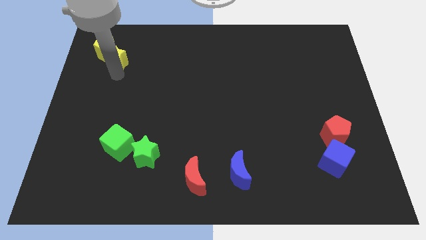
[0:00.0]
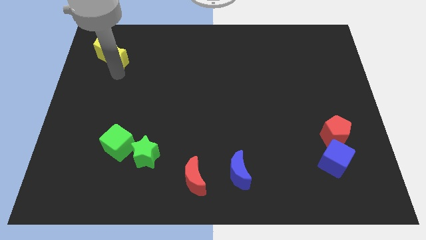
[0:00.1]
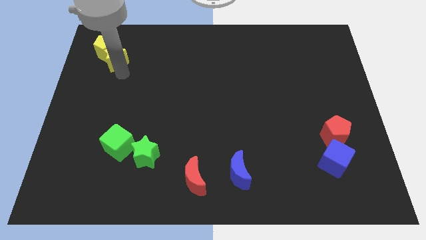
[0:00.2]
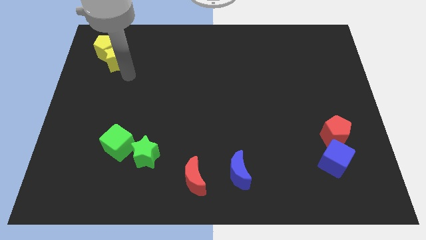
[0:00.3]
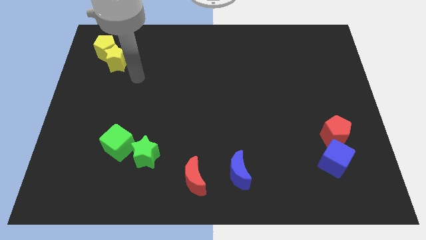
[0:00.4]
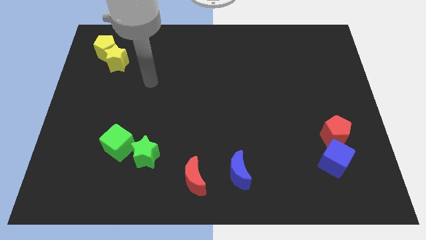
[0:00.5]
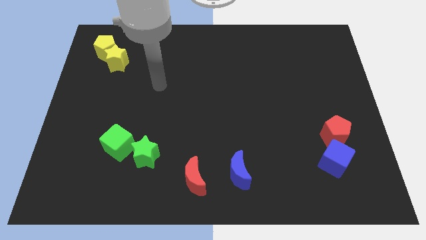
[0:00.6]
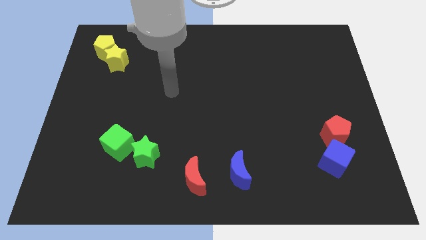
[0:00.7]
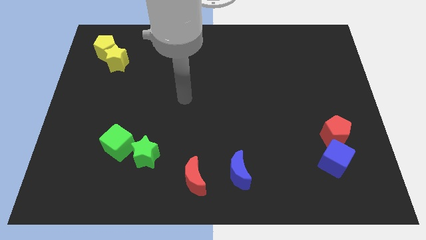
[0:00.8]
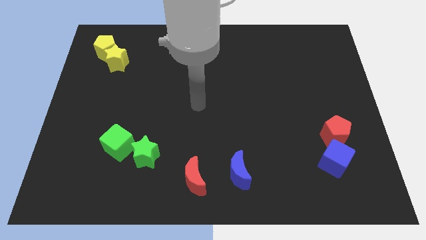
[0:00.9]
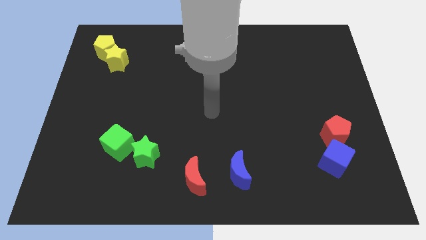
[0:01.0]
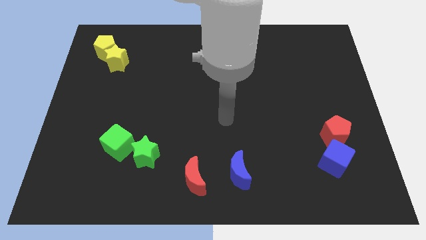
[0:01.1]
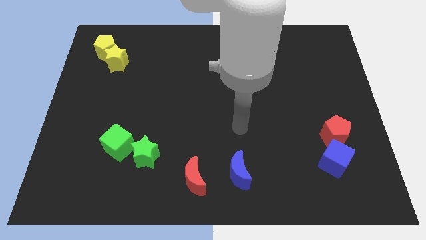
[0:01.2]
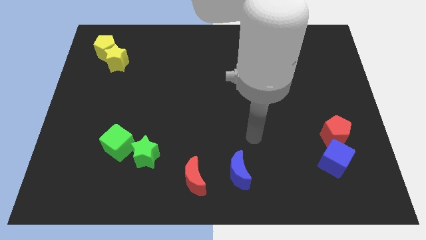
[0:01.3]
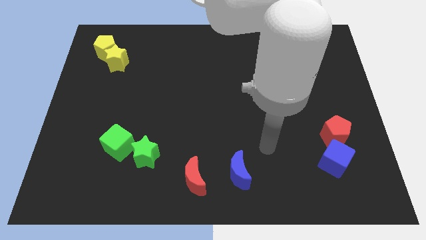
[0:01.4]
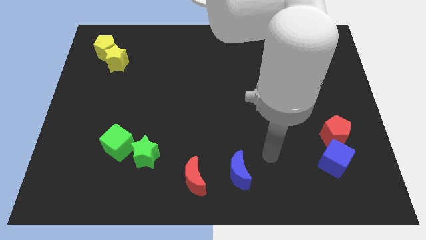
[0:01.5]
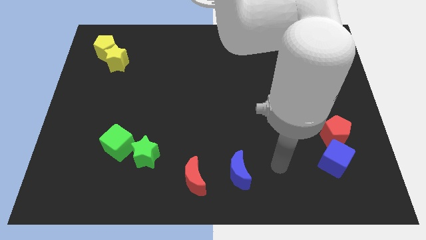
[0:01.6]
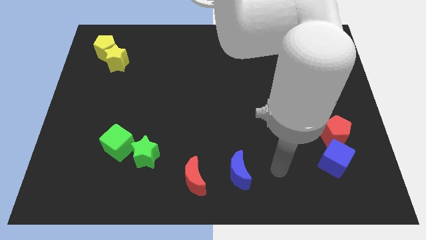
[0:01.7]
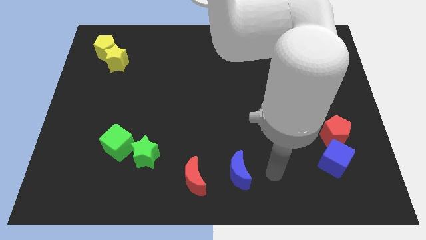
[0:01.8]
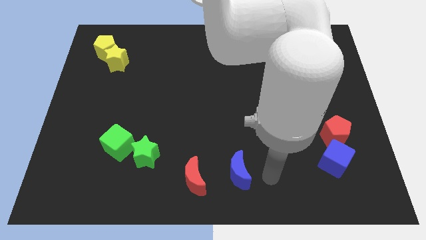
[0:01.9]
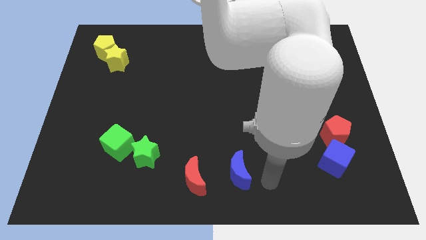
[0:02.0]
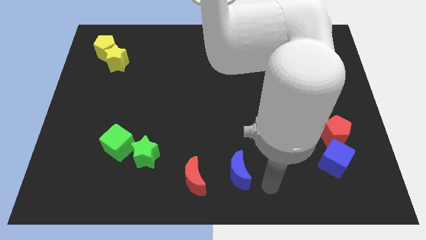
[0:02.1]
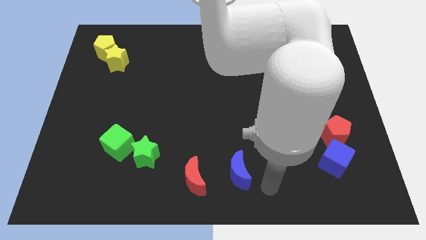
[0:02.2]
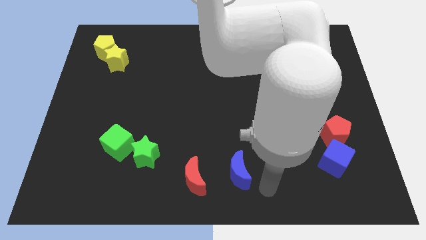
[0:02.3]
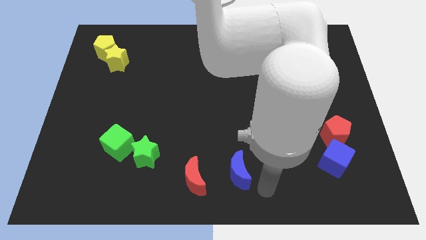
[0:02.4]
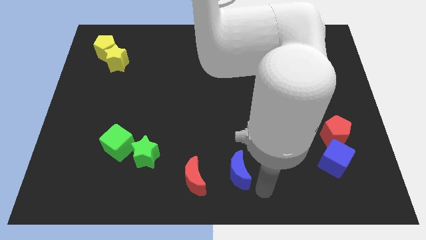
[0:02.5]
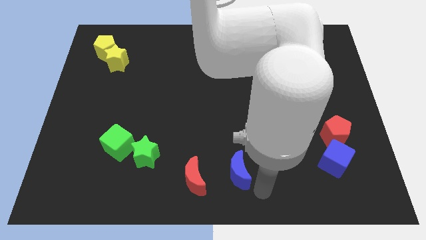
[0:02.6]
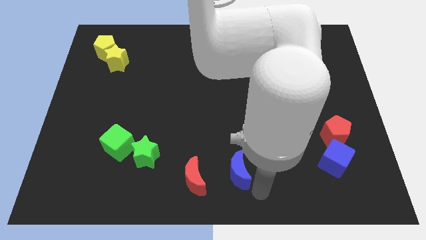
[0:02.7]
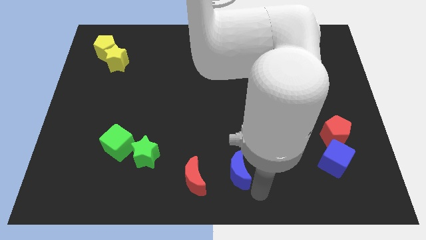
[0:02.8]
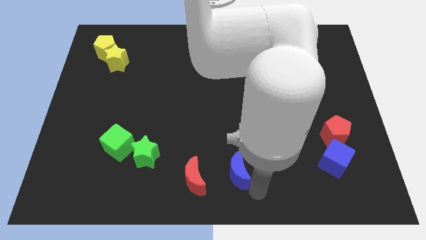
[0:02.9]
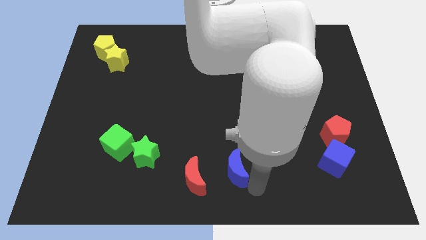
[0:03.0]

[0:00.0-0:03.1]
move the arm to the bottom right to the blue crescent

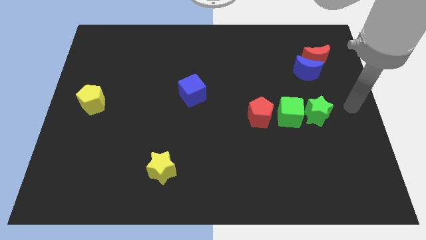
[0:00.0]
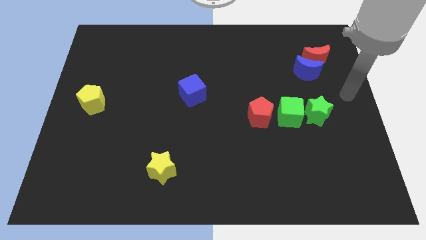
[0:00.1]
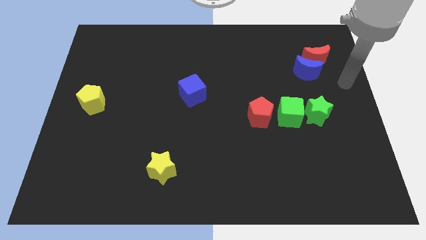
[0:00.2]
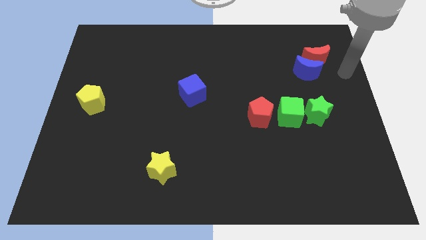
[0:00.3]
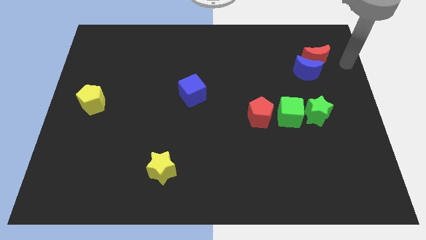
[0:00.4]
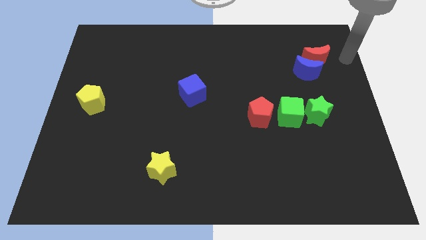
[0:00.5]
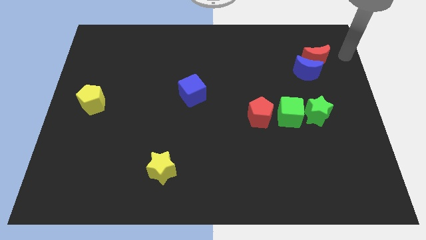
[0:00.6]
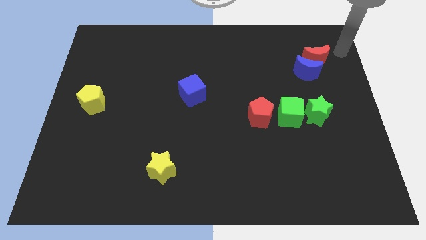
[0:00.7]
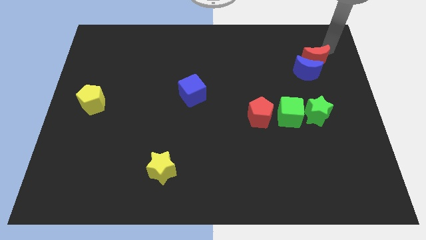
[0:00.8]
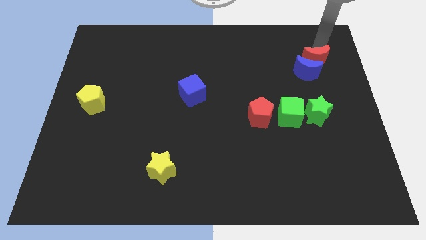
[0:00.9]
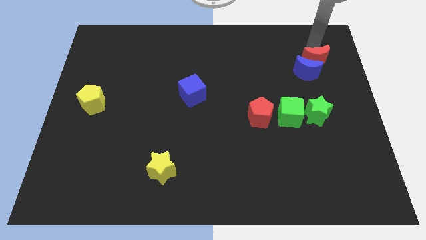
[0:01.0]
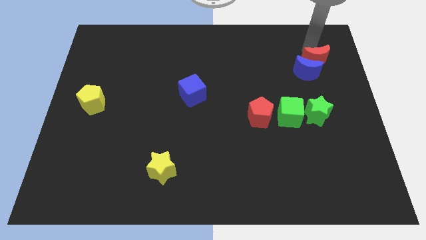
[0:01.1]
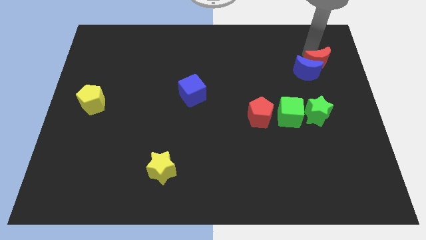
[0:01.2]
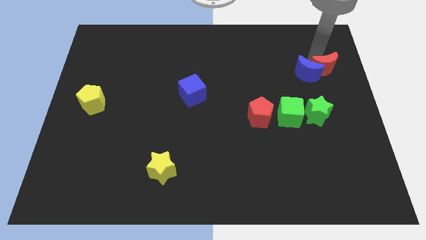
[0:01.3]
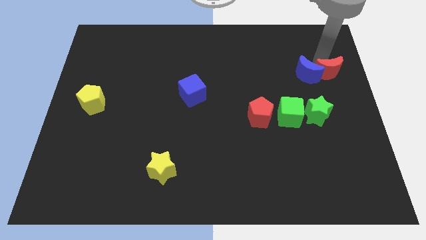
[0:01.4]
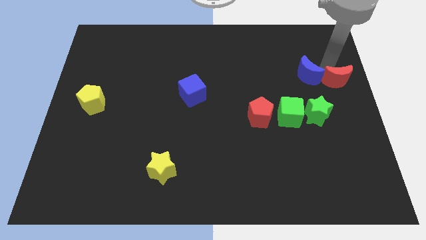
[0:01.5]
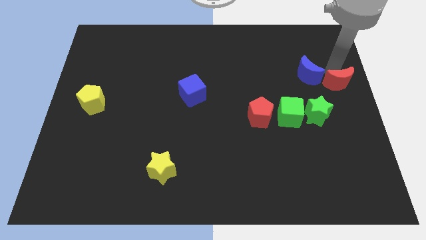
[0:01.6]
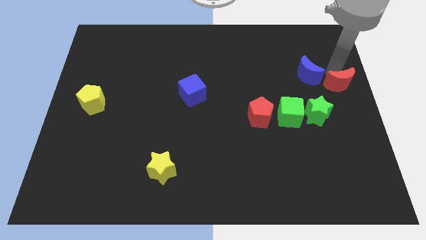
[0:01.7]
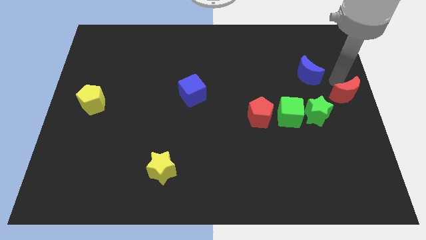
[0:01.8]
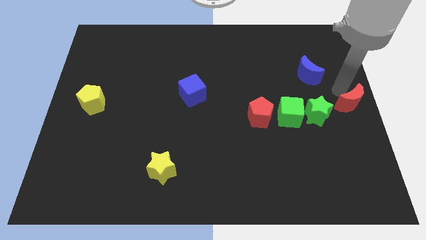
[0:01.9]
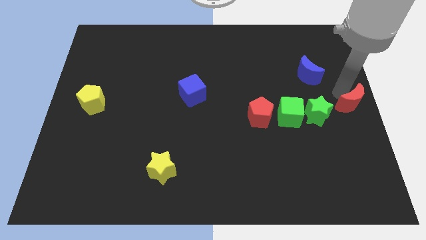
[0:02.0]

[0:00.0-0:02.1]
separate the red moon from the blue moon

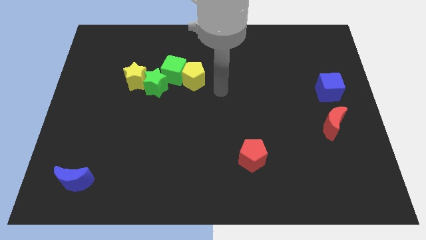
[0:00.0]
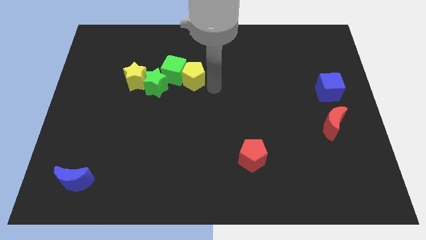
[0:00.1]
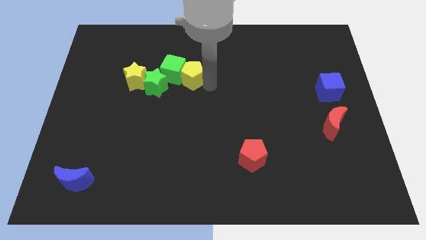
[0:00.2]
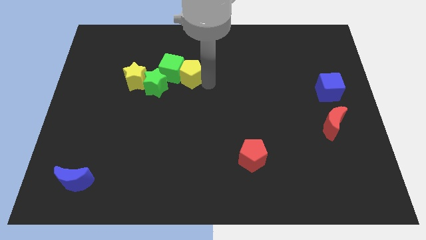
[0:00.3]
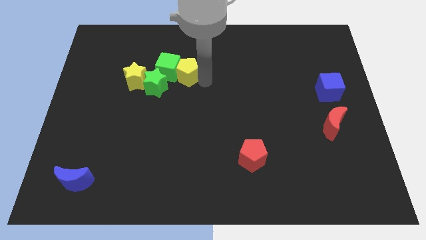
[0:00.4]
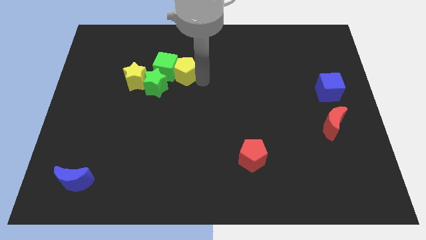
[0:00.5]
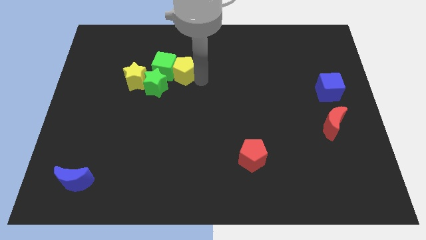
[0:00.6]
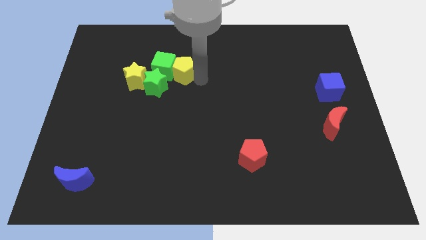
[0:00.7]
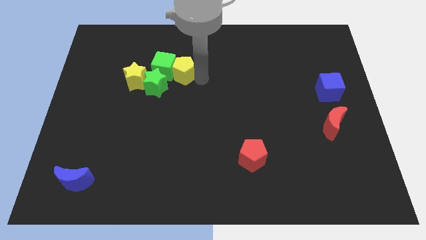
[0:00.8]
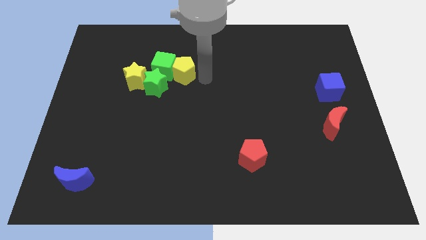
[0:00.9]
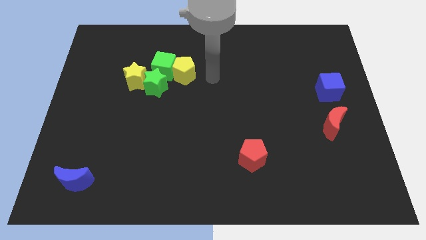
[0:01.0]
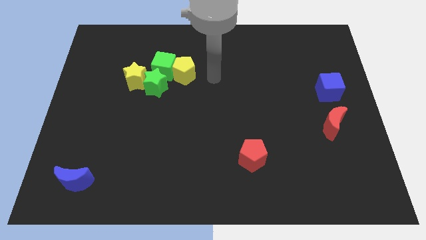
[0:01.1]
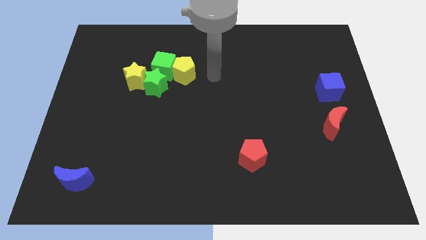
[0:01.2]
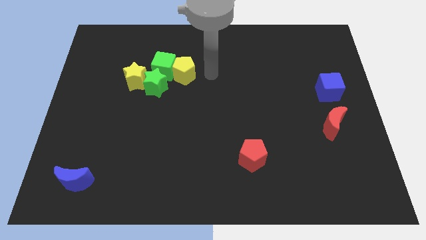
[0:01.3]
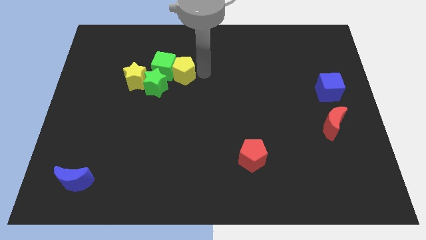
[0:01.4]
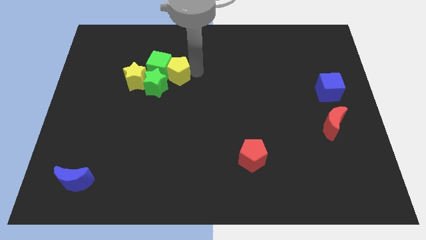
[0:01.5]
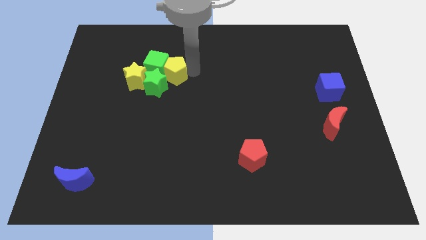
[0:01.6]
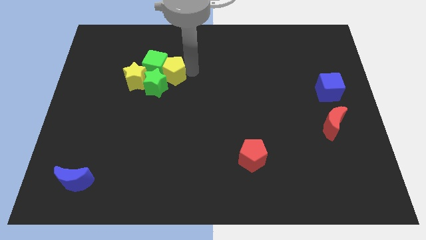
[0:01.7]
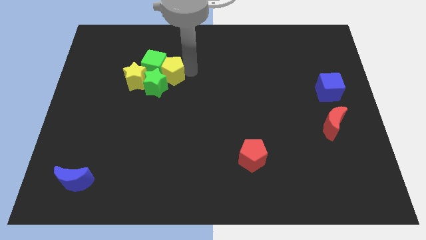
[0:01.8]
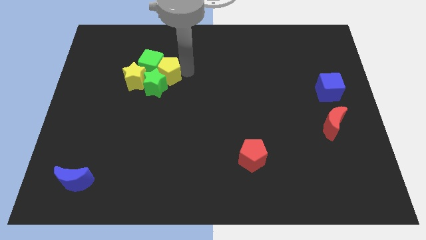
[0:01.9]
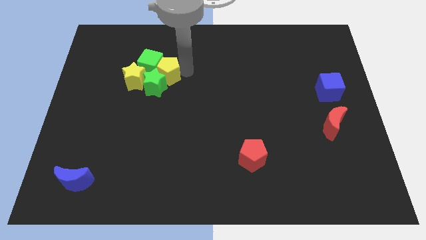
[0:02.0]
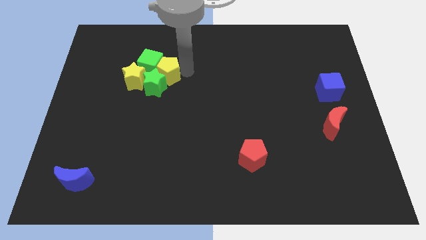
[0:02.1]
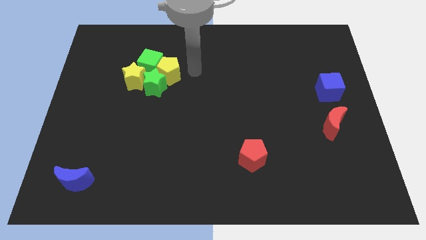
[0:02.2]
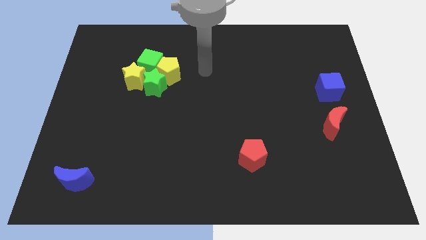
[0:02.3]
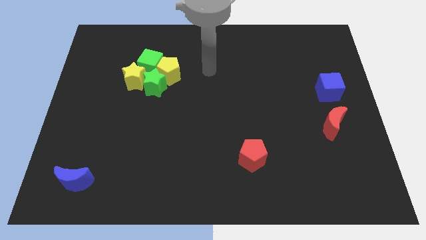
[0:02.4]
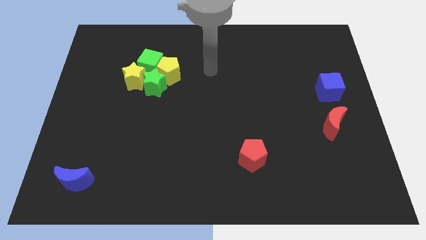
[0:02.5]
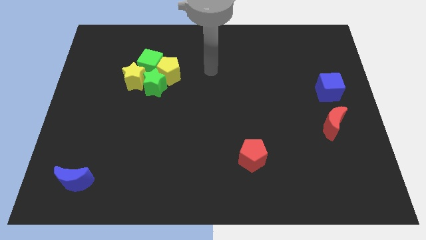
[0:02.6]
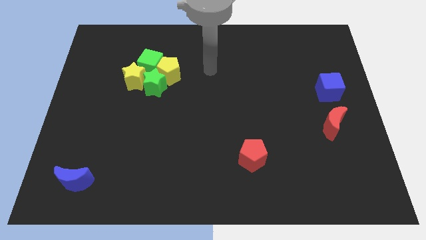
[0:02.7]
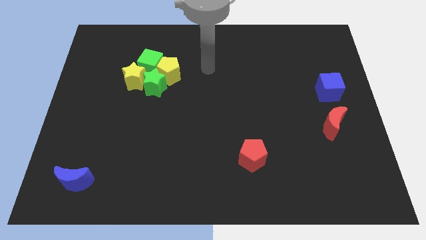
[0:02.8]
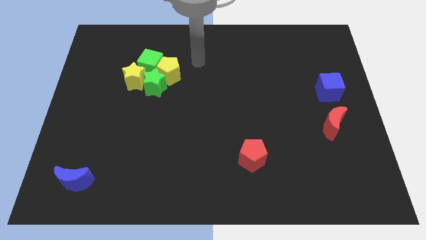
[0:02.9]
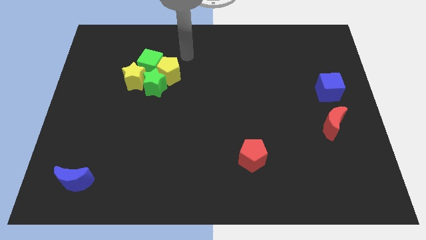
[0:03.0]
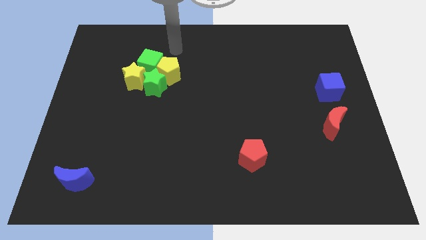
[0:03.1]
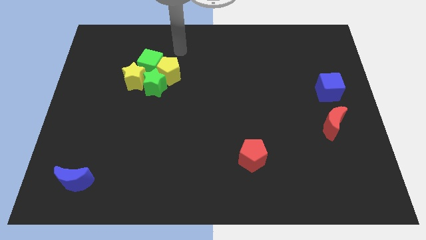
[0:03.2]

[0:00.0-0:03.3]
move the yellow pentagon and green cube slightly to the left

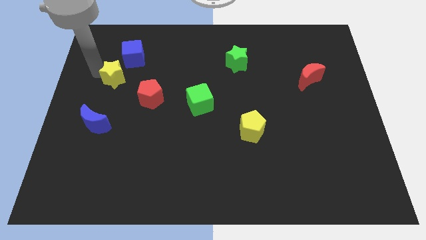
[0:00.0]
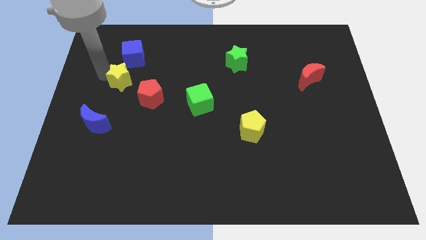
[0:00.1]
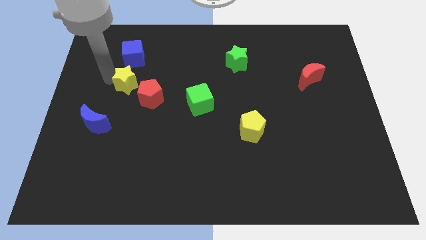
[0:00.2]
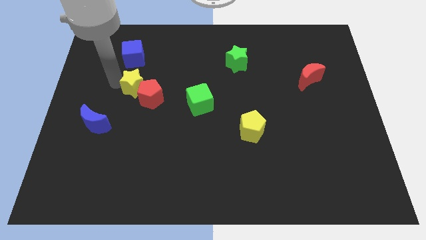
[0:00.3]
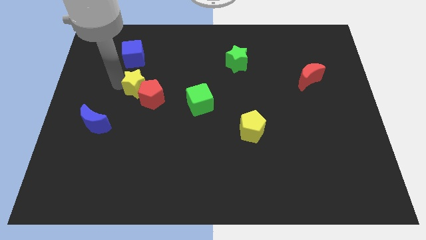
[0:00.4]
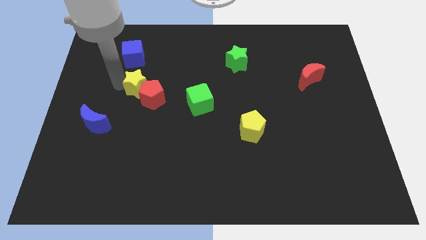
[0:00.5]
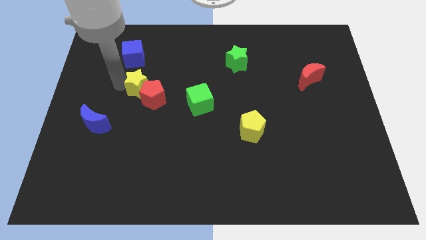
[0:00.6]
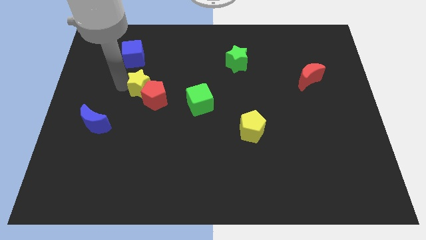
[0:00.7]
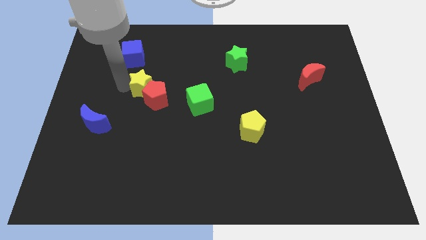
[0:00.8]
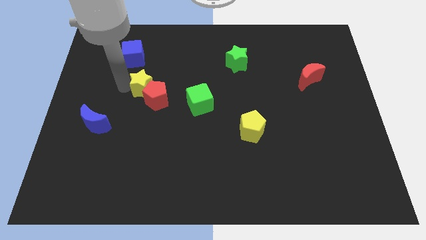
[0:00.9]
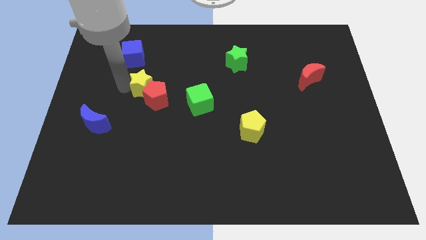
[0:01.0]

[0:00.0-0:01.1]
push the yellow star into the red pentgaon
